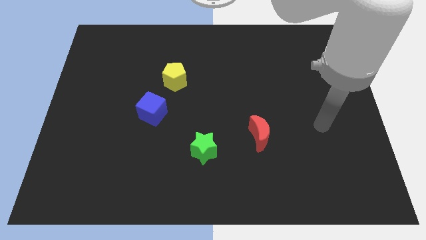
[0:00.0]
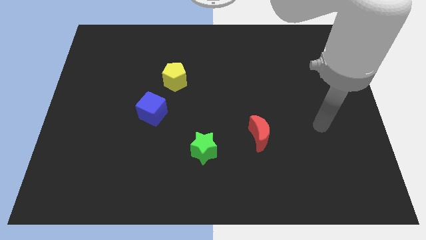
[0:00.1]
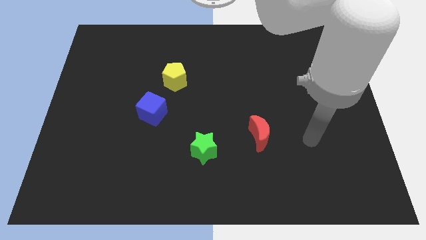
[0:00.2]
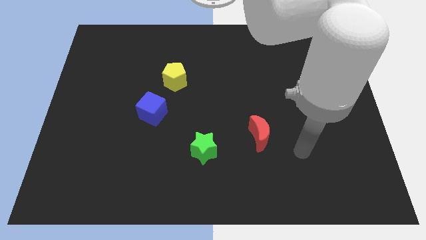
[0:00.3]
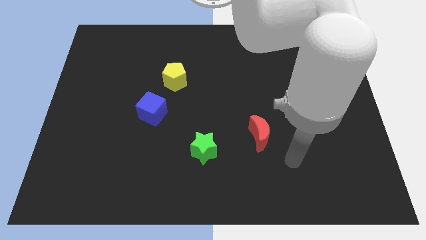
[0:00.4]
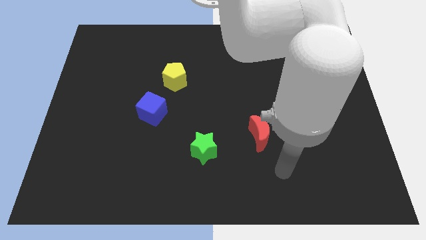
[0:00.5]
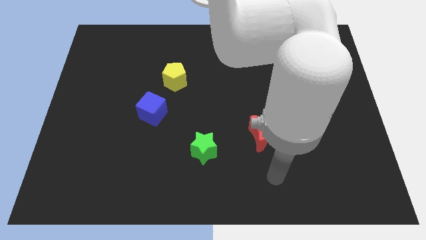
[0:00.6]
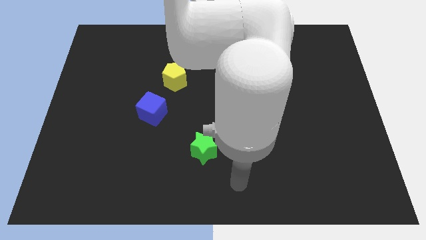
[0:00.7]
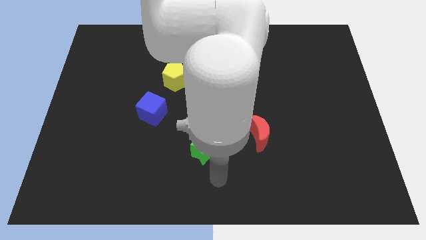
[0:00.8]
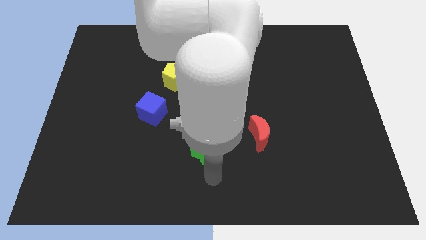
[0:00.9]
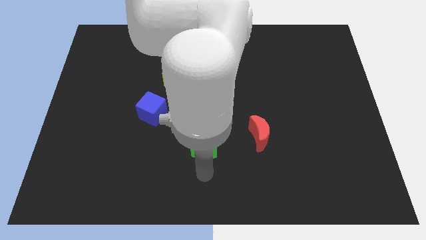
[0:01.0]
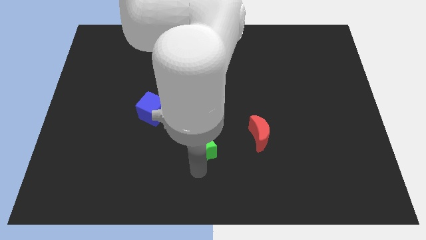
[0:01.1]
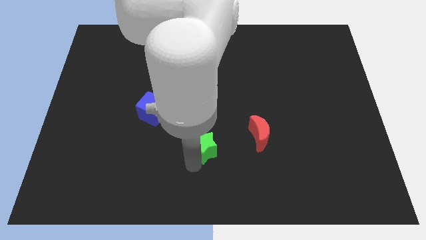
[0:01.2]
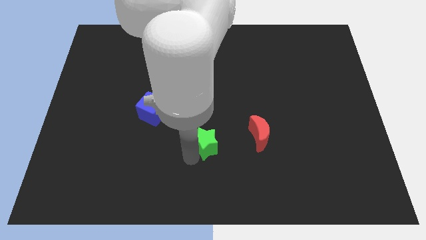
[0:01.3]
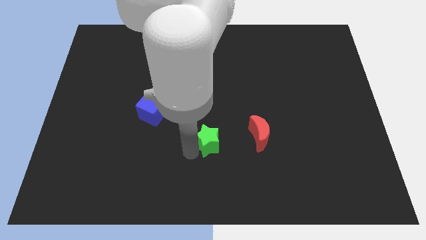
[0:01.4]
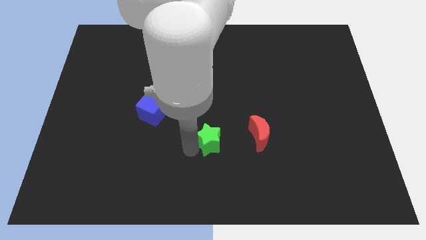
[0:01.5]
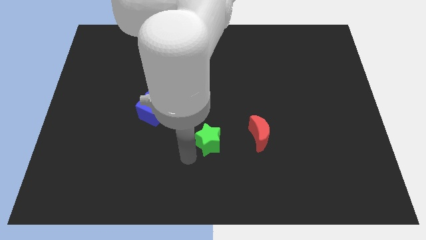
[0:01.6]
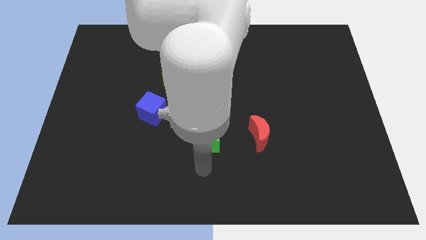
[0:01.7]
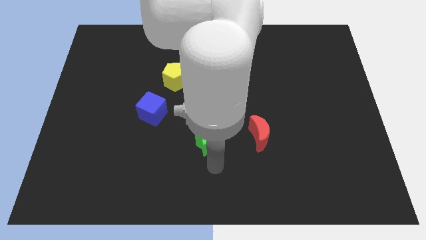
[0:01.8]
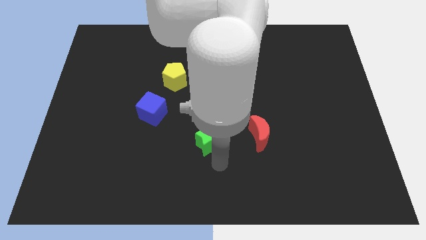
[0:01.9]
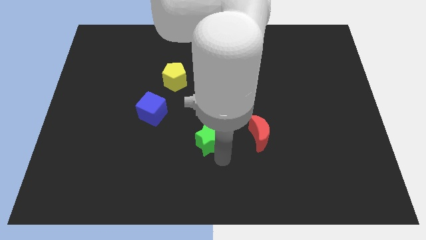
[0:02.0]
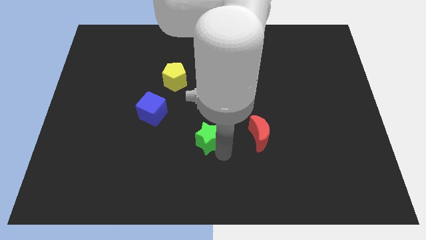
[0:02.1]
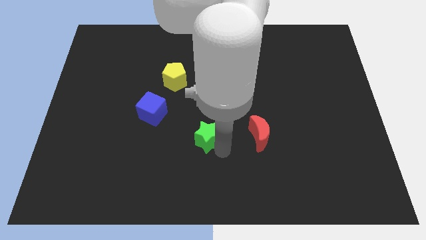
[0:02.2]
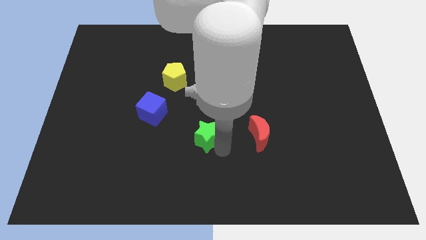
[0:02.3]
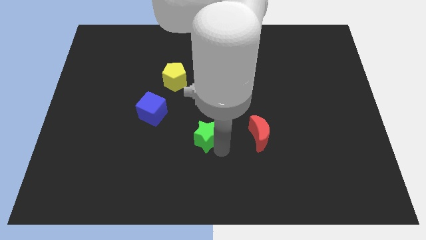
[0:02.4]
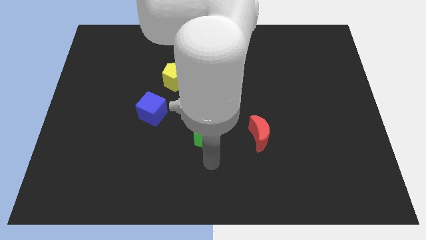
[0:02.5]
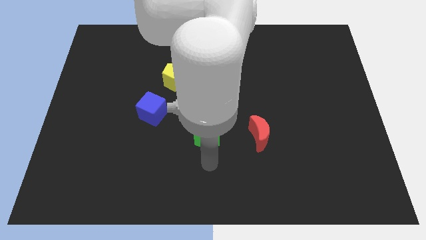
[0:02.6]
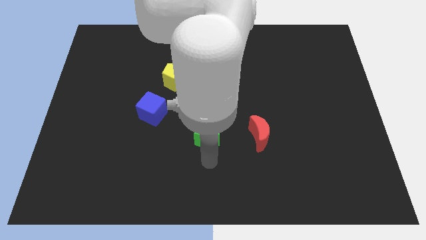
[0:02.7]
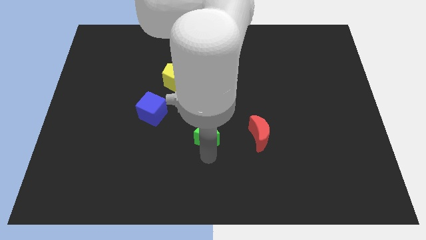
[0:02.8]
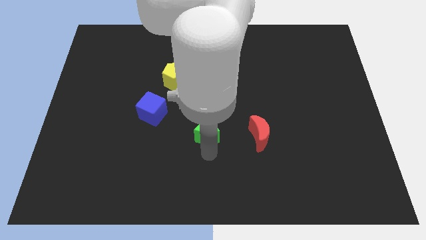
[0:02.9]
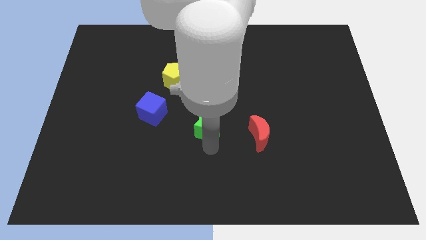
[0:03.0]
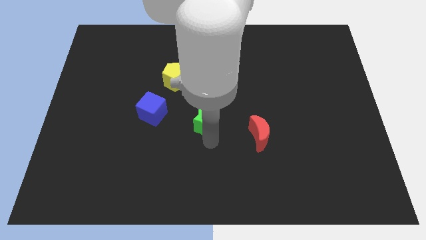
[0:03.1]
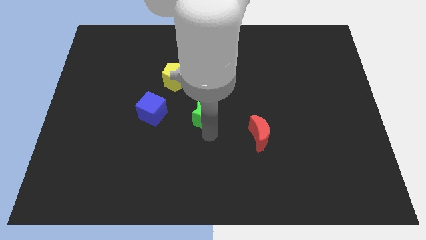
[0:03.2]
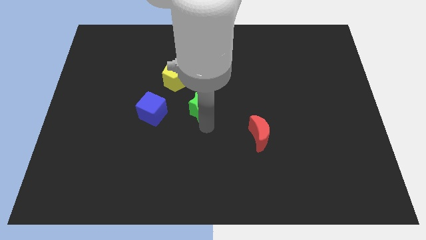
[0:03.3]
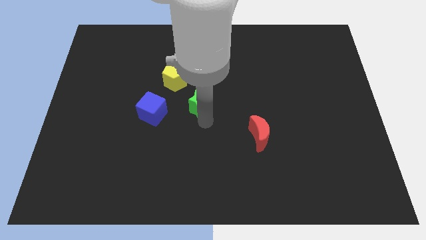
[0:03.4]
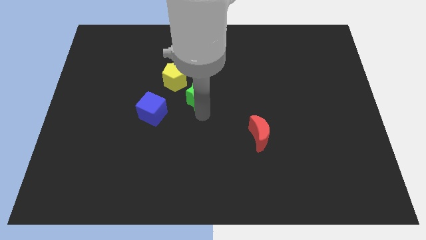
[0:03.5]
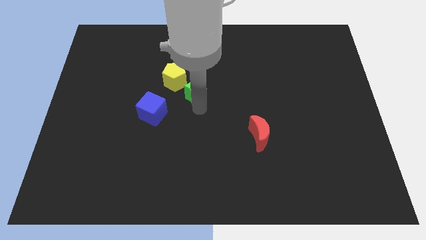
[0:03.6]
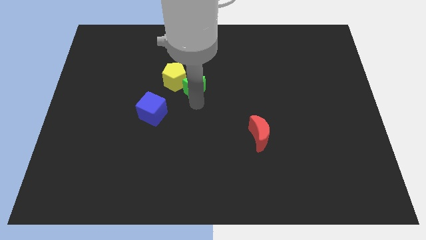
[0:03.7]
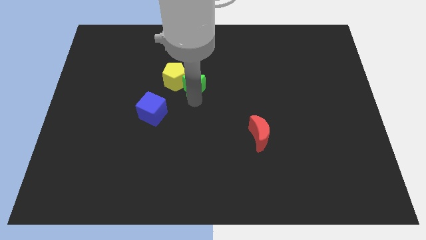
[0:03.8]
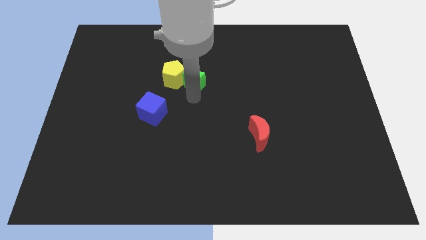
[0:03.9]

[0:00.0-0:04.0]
move the green block close to the pentagon

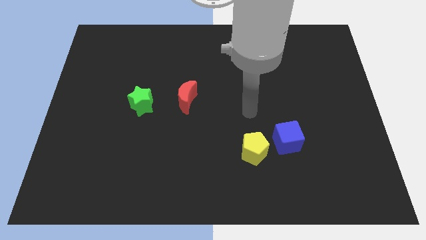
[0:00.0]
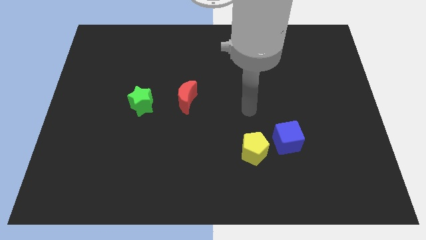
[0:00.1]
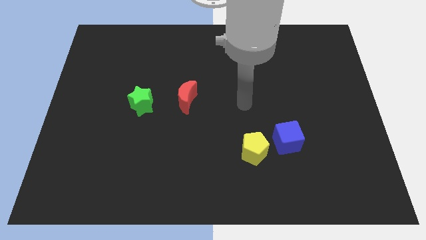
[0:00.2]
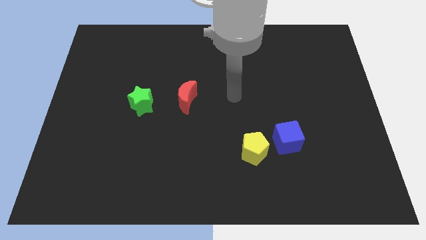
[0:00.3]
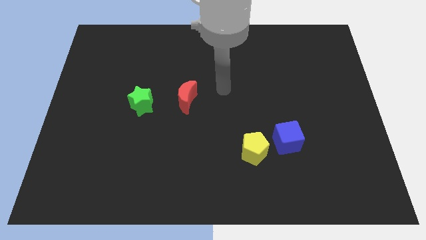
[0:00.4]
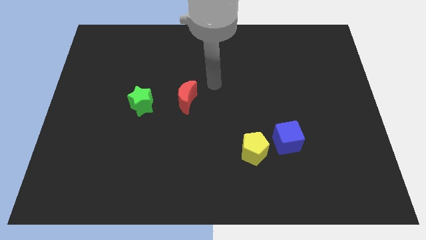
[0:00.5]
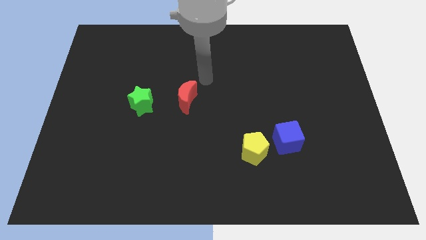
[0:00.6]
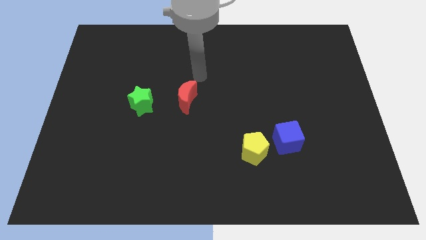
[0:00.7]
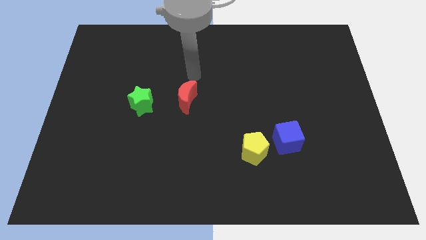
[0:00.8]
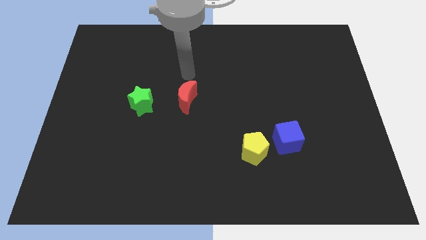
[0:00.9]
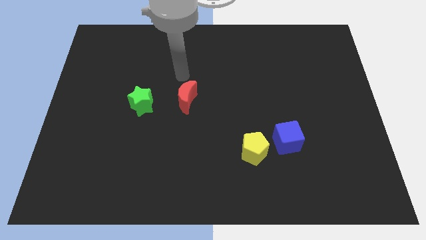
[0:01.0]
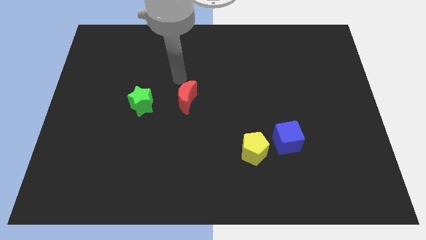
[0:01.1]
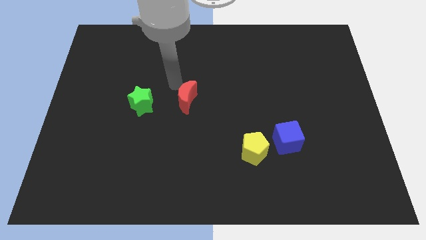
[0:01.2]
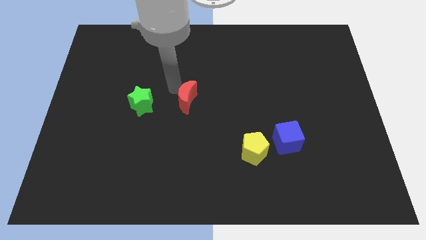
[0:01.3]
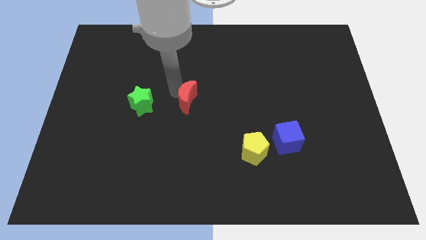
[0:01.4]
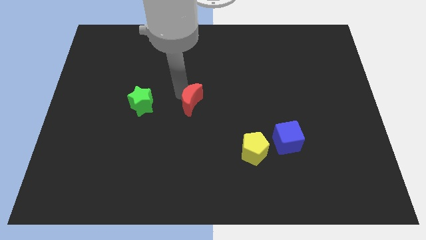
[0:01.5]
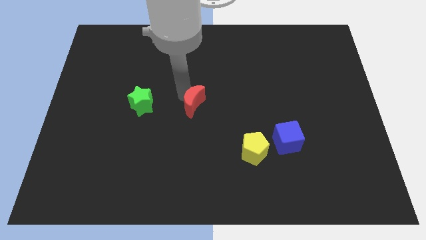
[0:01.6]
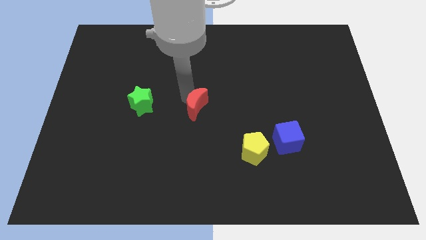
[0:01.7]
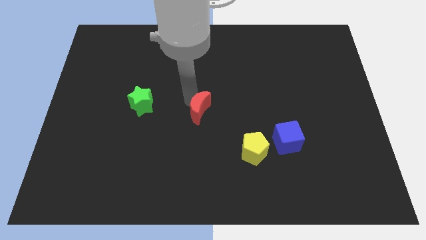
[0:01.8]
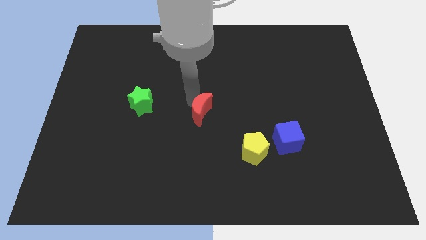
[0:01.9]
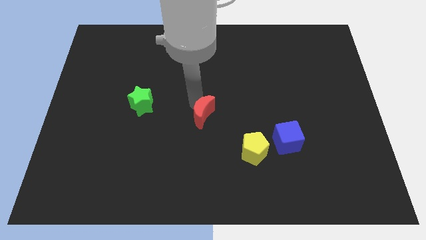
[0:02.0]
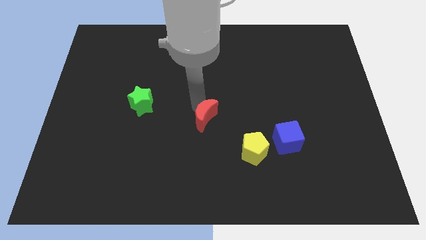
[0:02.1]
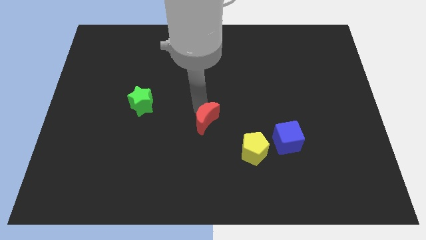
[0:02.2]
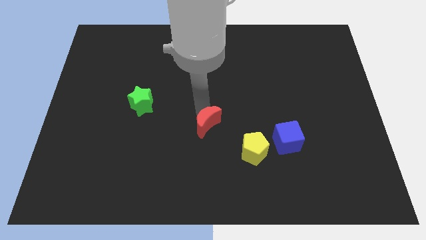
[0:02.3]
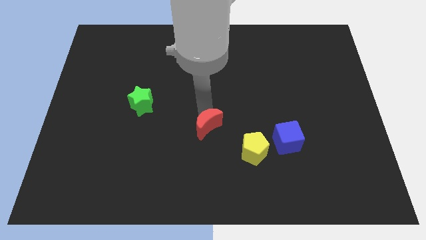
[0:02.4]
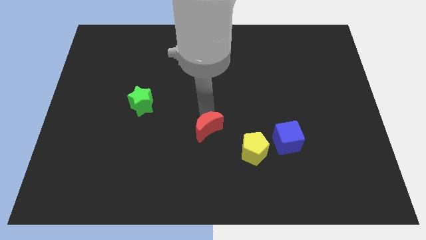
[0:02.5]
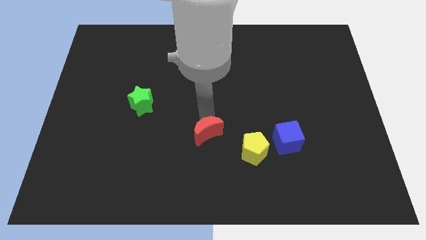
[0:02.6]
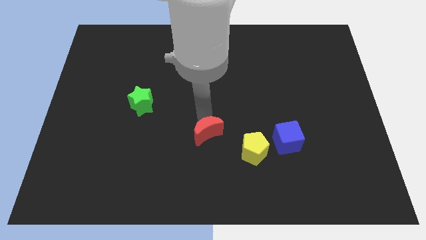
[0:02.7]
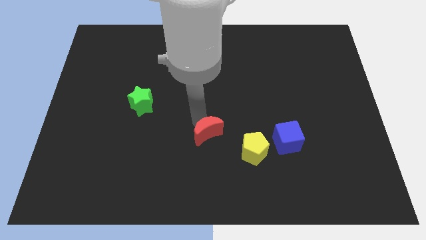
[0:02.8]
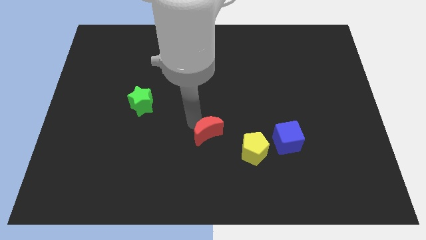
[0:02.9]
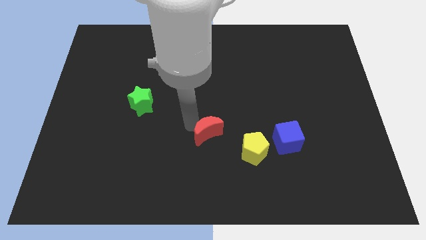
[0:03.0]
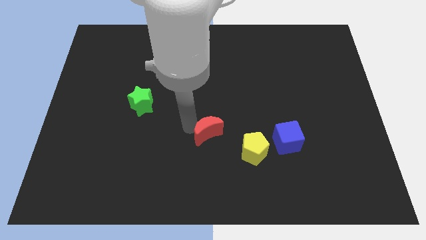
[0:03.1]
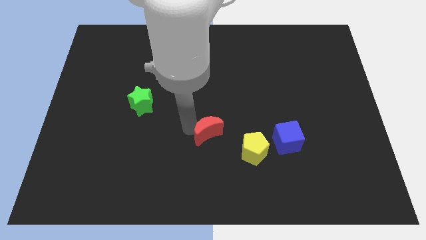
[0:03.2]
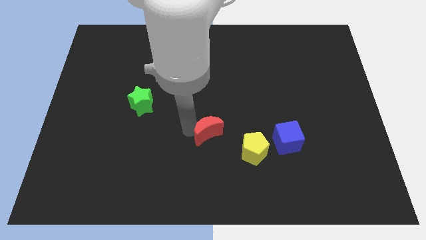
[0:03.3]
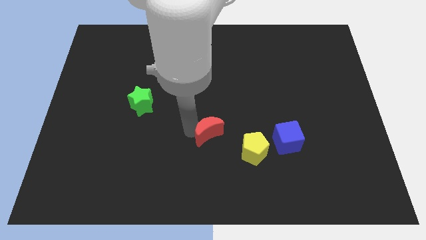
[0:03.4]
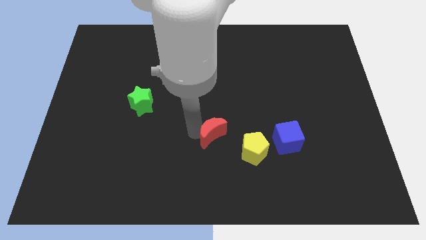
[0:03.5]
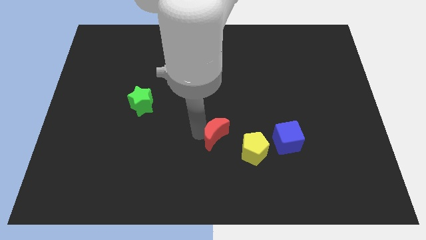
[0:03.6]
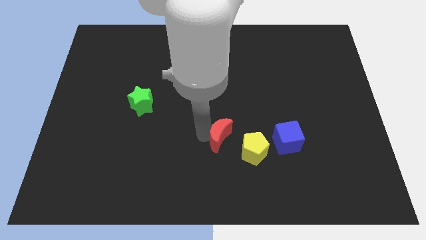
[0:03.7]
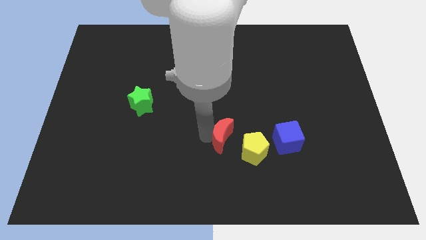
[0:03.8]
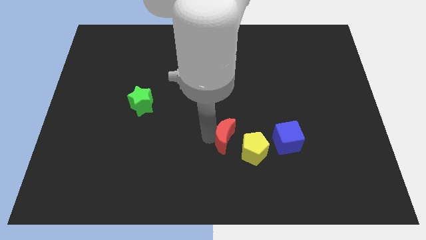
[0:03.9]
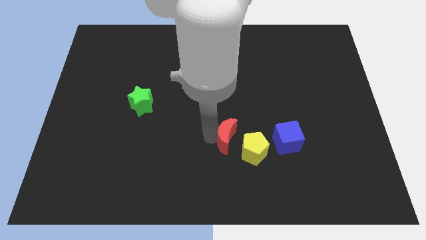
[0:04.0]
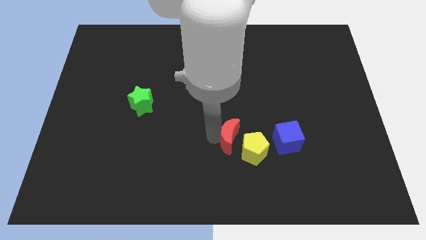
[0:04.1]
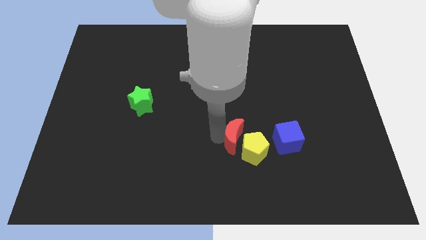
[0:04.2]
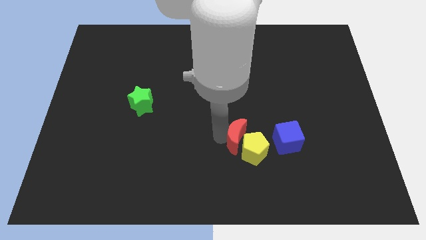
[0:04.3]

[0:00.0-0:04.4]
slide the red block close to the yellow block
